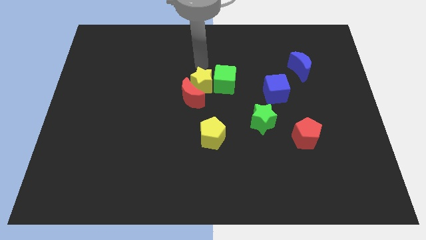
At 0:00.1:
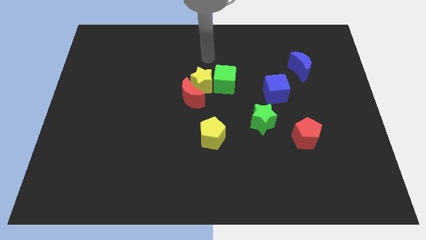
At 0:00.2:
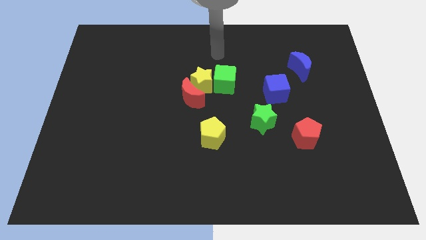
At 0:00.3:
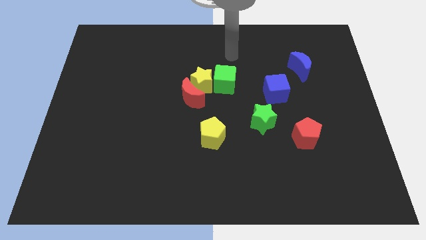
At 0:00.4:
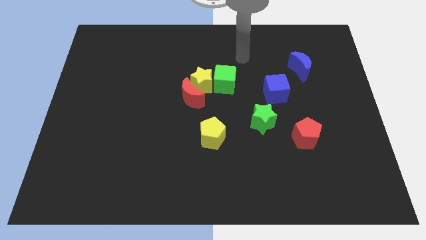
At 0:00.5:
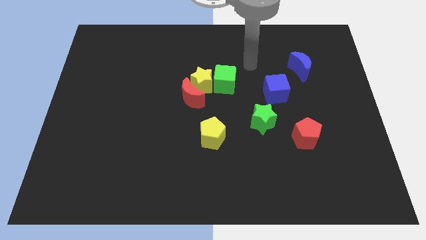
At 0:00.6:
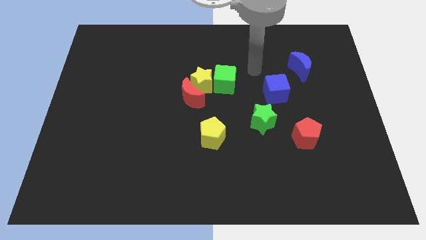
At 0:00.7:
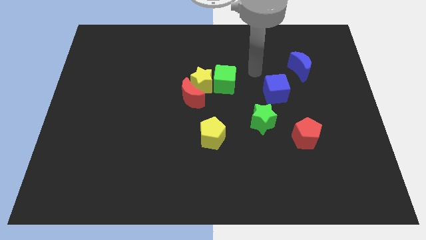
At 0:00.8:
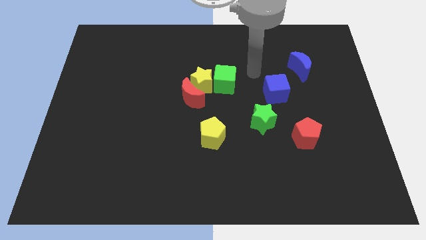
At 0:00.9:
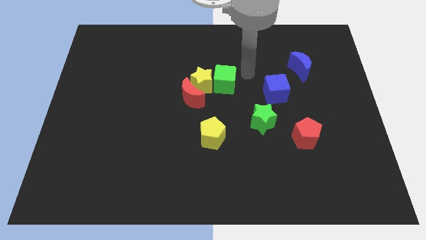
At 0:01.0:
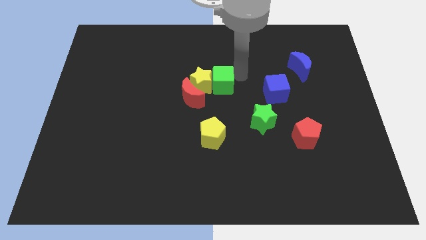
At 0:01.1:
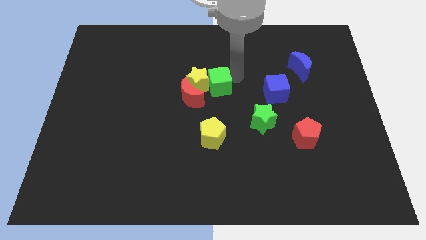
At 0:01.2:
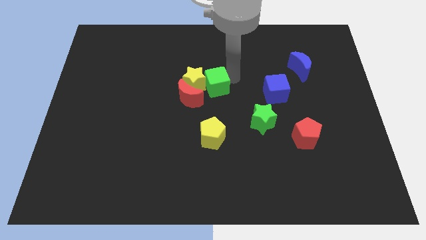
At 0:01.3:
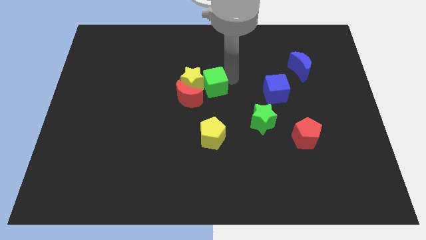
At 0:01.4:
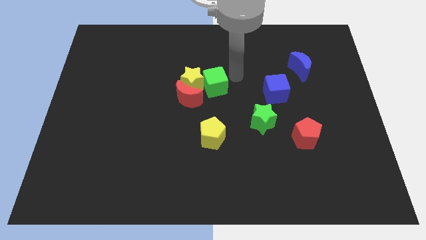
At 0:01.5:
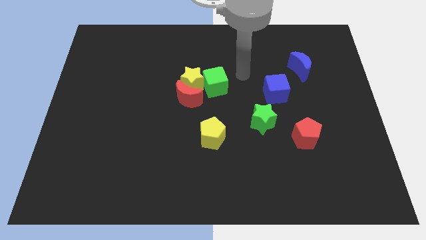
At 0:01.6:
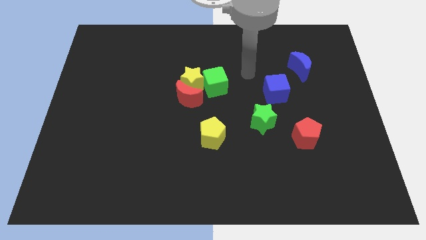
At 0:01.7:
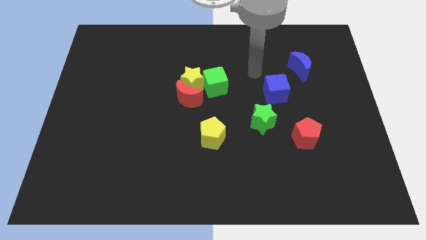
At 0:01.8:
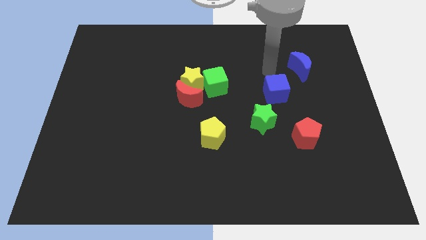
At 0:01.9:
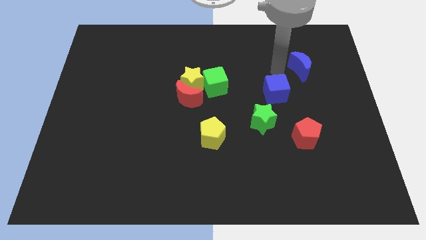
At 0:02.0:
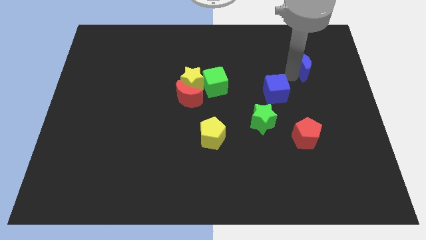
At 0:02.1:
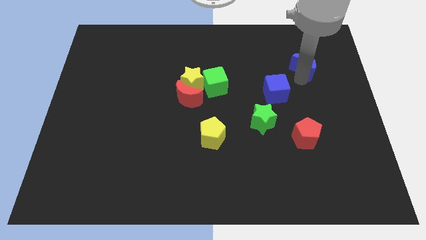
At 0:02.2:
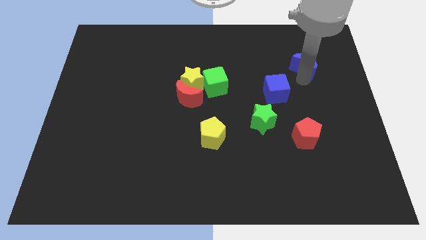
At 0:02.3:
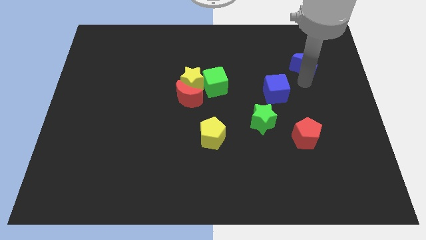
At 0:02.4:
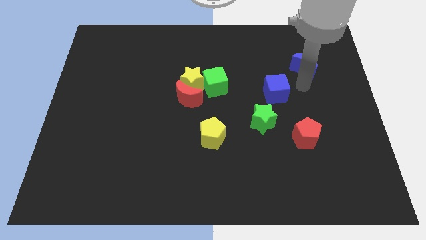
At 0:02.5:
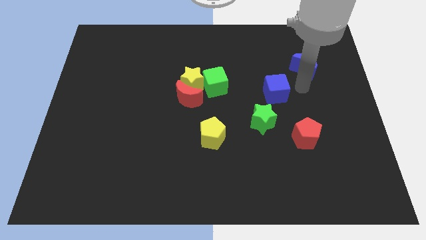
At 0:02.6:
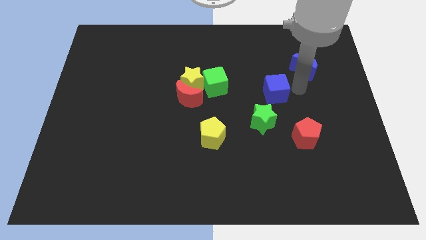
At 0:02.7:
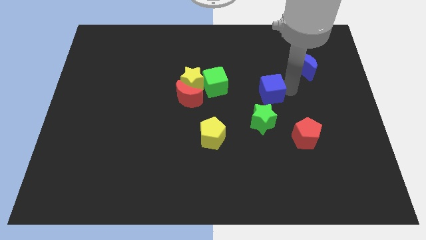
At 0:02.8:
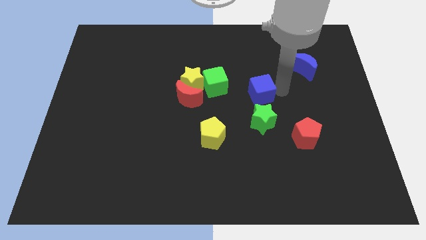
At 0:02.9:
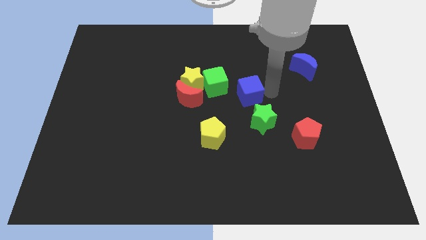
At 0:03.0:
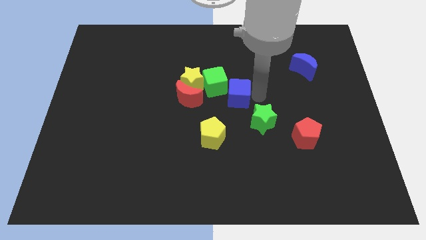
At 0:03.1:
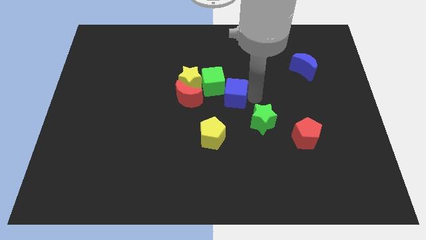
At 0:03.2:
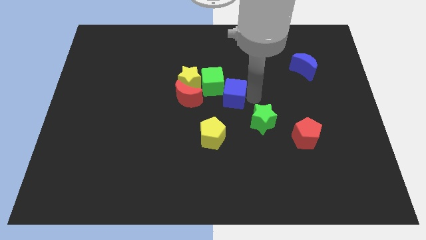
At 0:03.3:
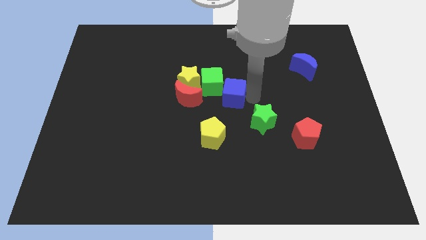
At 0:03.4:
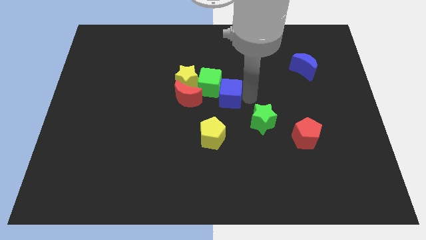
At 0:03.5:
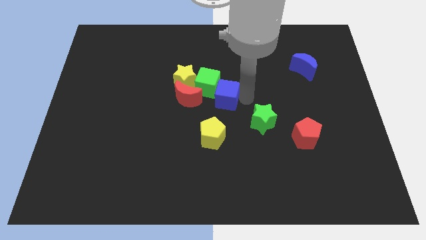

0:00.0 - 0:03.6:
drag the blue cube right next to green cube

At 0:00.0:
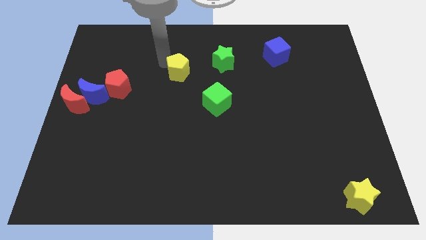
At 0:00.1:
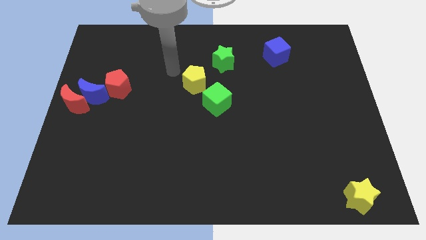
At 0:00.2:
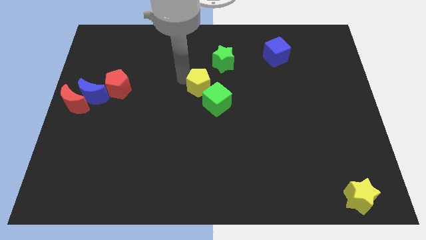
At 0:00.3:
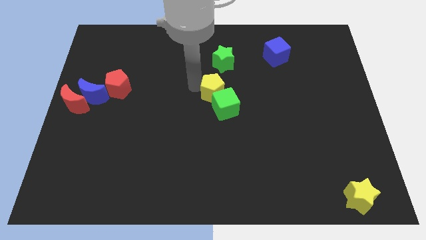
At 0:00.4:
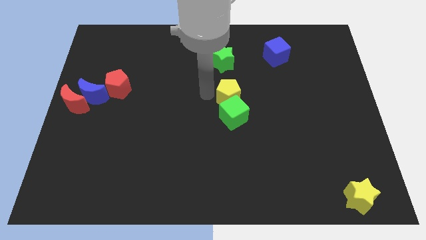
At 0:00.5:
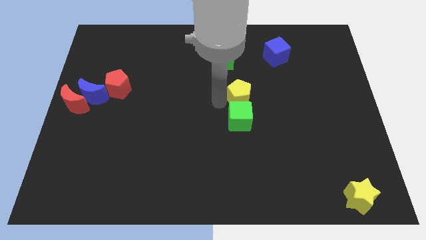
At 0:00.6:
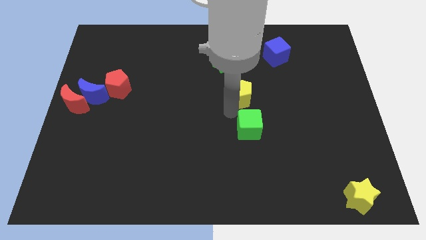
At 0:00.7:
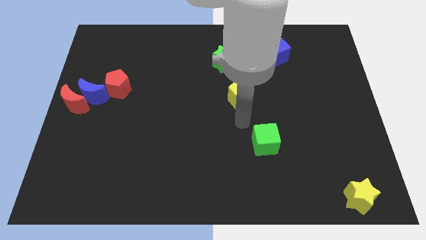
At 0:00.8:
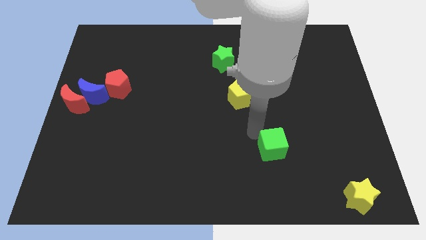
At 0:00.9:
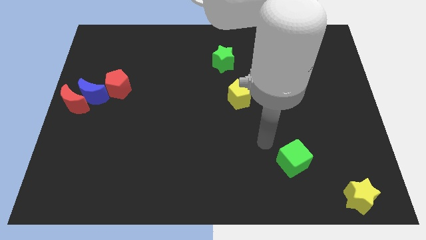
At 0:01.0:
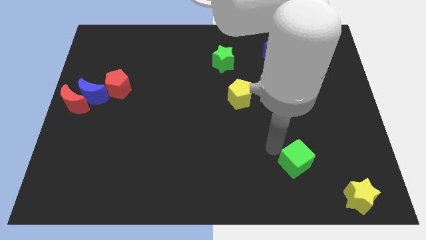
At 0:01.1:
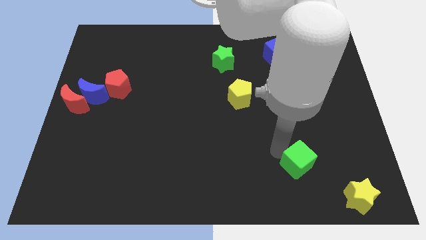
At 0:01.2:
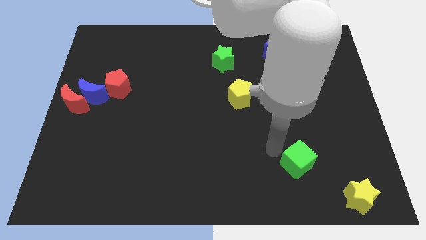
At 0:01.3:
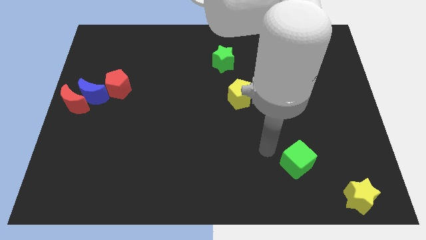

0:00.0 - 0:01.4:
push the yellow pentagon into the green cube and separate them

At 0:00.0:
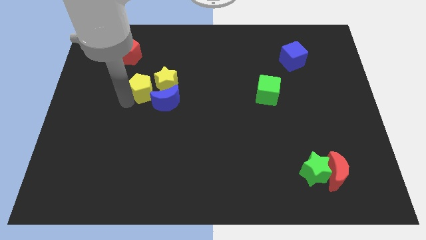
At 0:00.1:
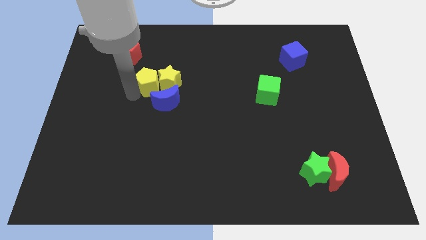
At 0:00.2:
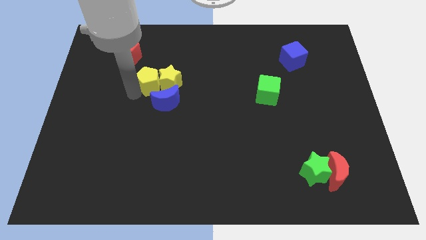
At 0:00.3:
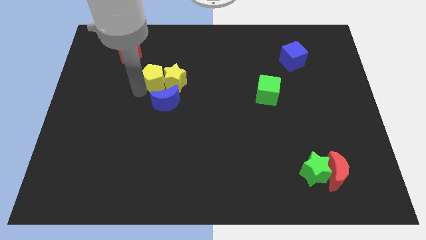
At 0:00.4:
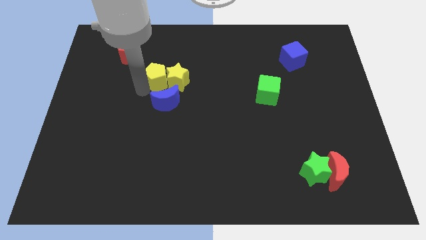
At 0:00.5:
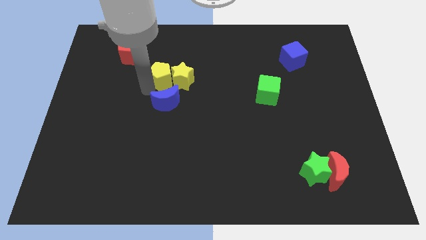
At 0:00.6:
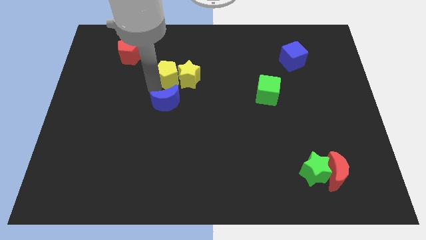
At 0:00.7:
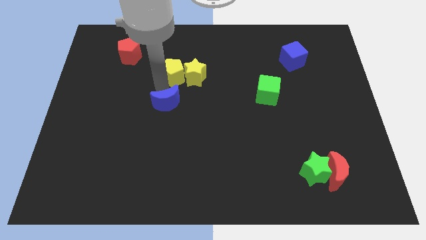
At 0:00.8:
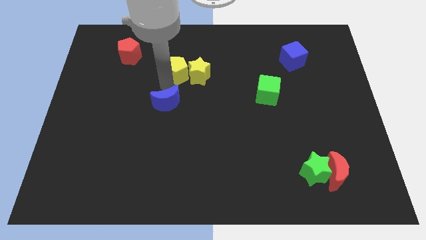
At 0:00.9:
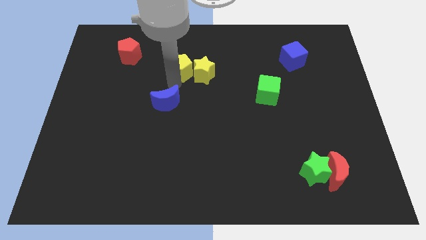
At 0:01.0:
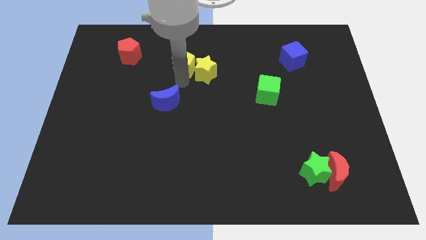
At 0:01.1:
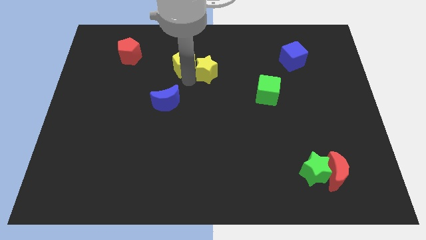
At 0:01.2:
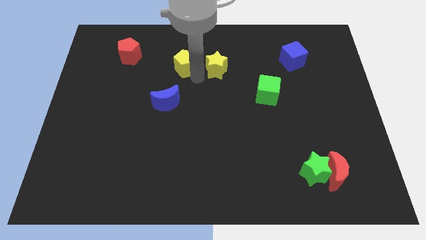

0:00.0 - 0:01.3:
move yellow blocks away from blue crescent

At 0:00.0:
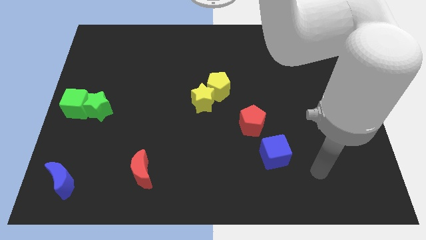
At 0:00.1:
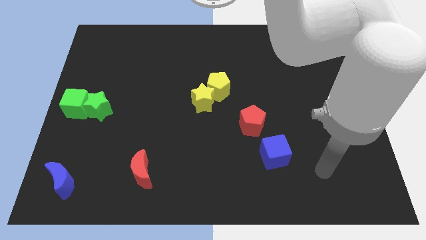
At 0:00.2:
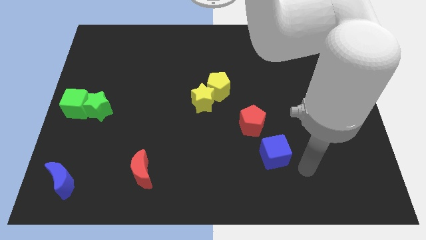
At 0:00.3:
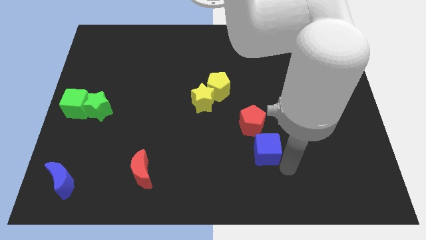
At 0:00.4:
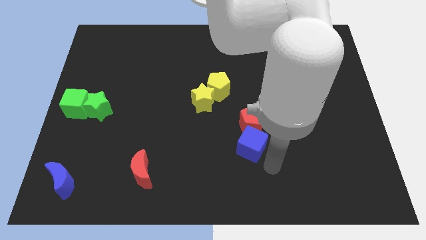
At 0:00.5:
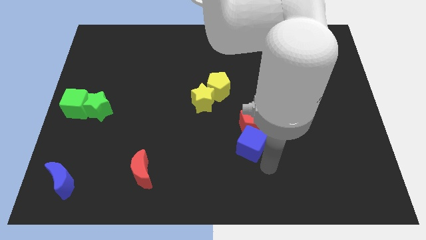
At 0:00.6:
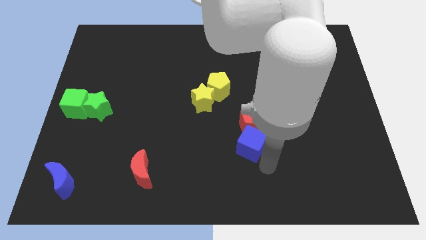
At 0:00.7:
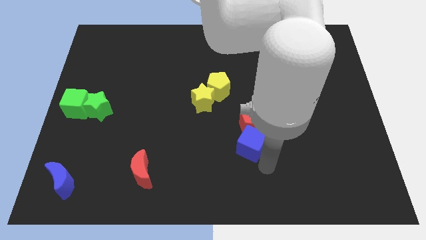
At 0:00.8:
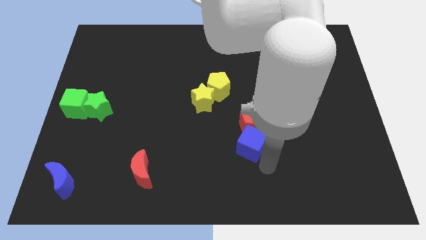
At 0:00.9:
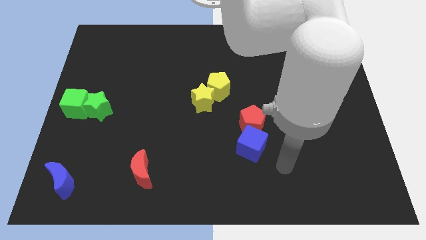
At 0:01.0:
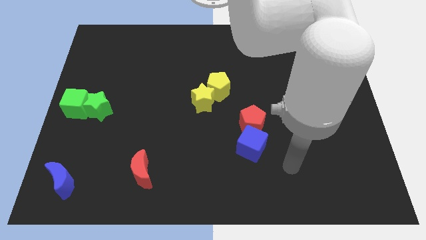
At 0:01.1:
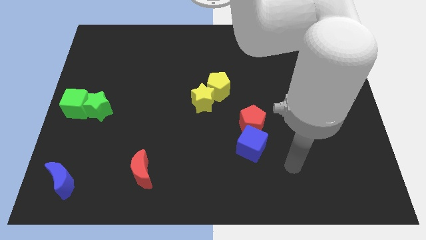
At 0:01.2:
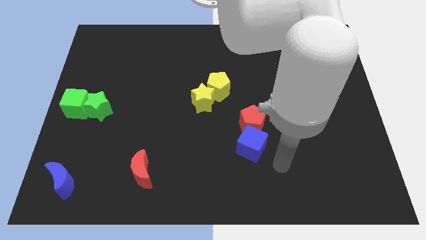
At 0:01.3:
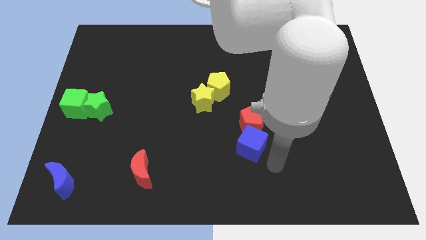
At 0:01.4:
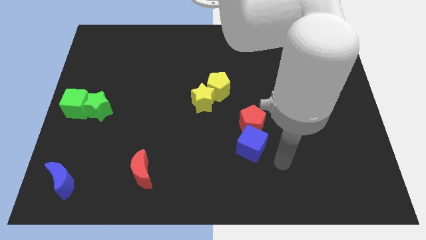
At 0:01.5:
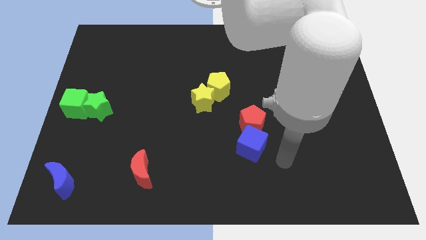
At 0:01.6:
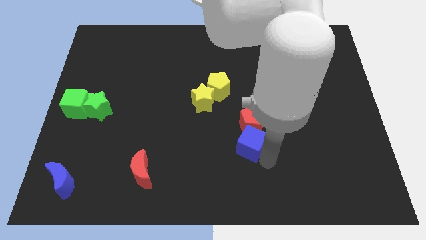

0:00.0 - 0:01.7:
slide the blue cube into the red pentagon

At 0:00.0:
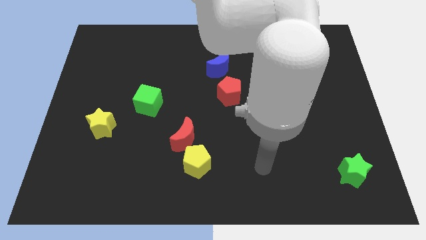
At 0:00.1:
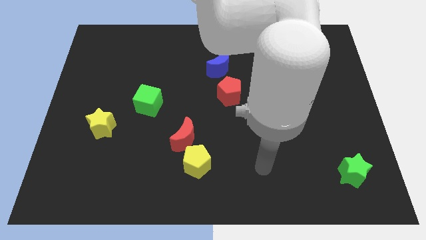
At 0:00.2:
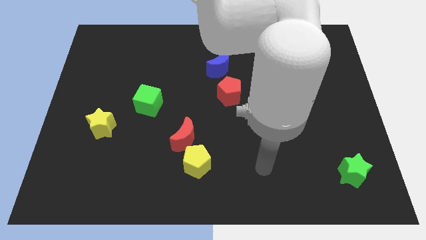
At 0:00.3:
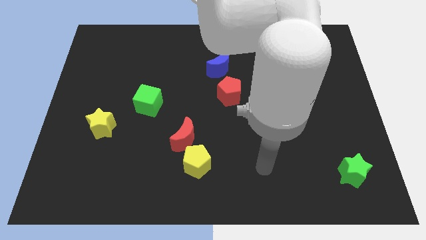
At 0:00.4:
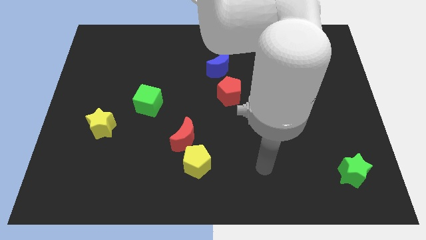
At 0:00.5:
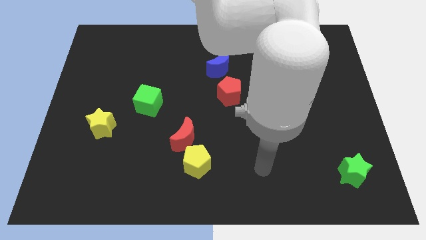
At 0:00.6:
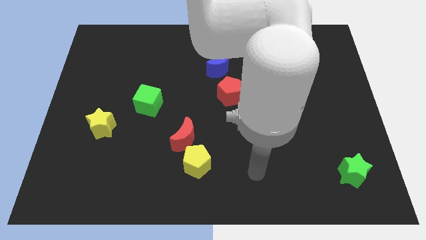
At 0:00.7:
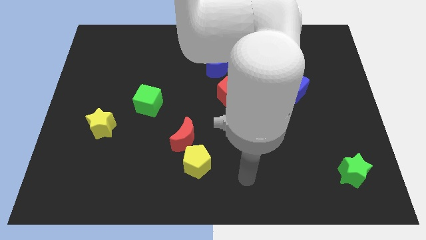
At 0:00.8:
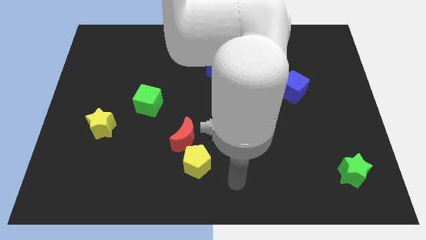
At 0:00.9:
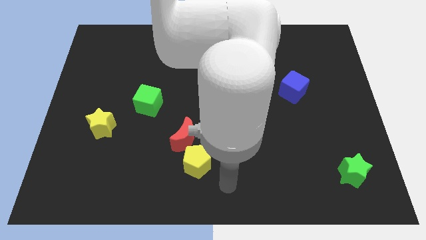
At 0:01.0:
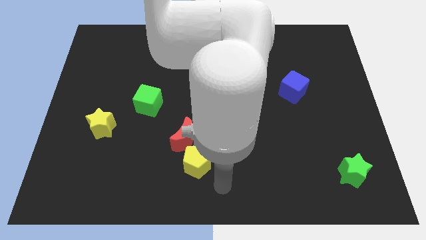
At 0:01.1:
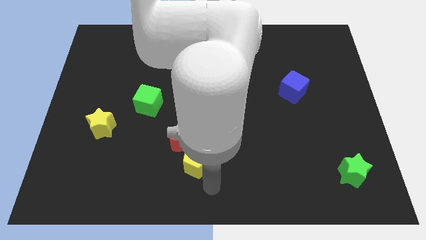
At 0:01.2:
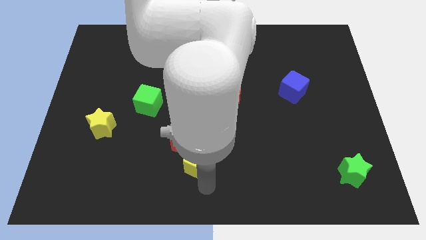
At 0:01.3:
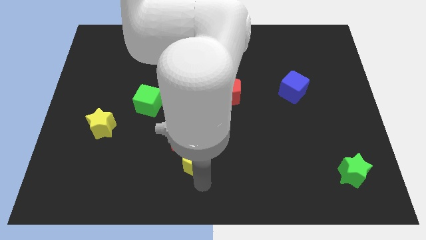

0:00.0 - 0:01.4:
point your arm below yellow pentagon
